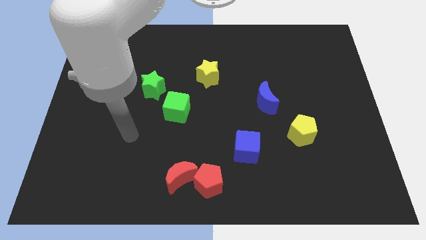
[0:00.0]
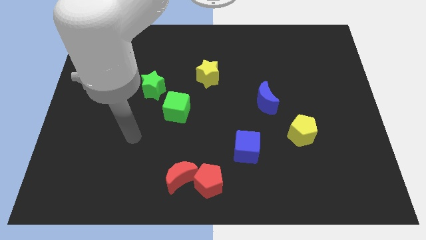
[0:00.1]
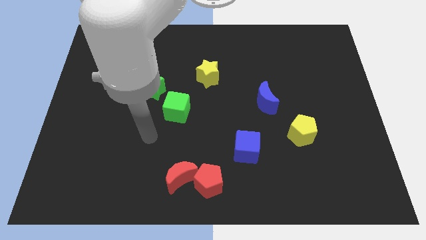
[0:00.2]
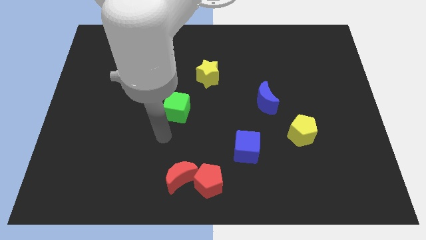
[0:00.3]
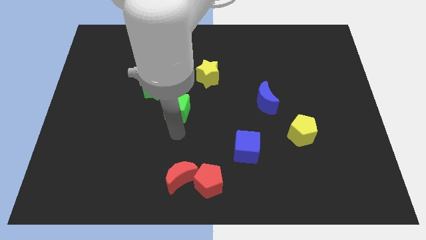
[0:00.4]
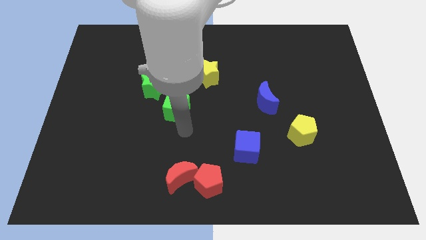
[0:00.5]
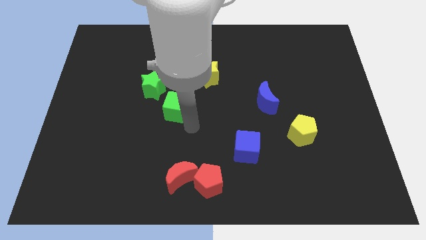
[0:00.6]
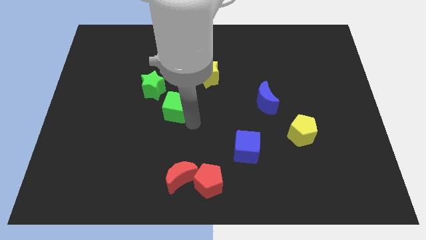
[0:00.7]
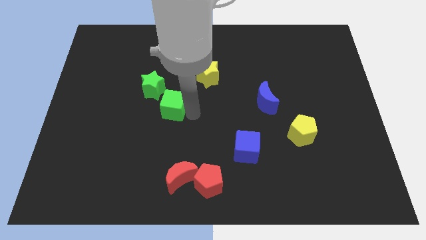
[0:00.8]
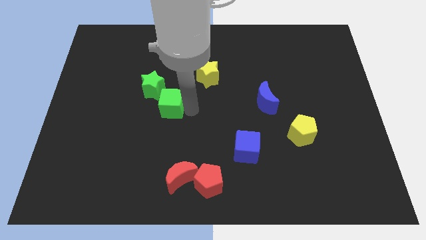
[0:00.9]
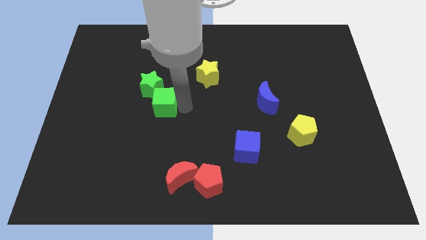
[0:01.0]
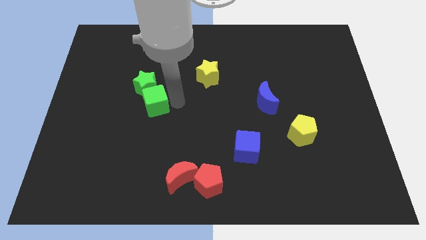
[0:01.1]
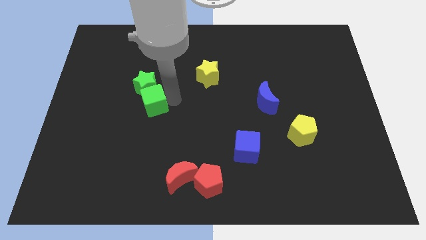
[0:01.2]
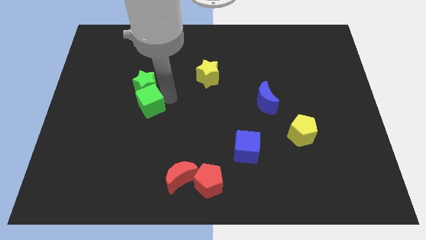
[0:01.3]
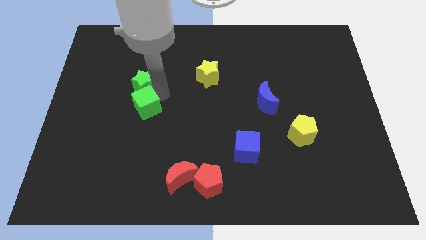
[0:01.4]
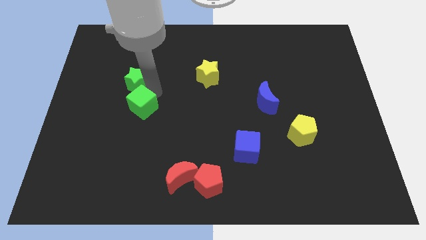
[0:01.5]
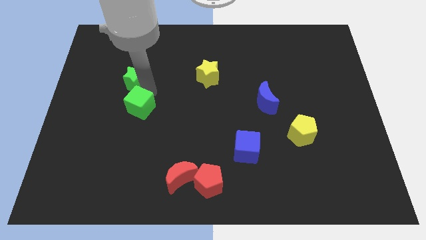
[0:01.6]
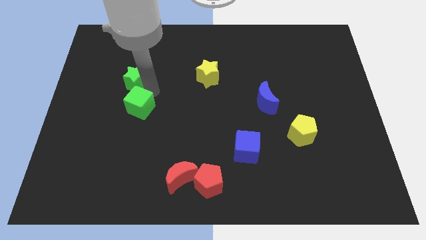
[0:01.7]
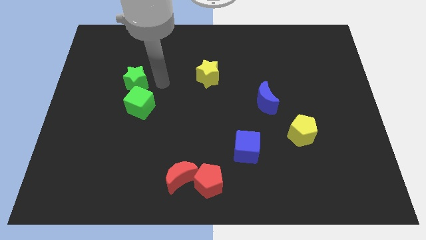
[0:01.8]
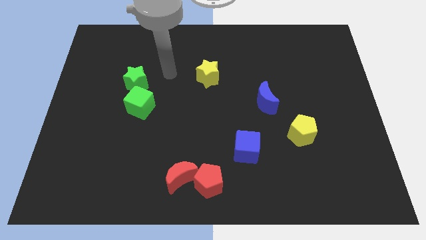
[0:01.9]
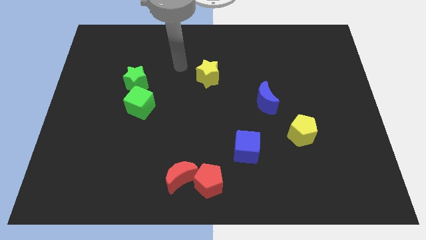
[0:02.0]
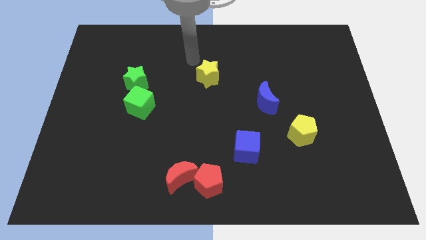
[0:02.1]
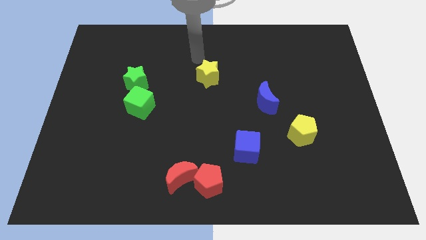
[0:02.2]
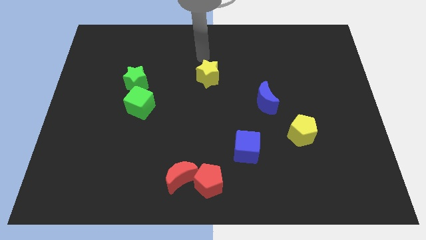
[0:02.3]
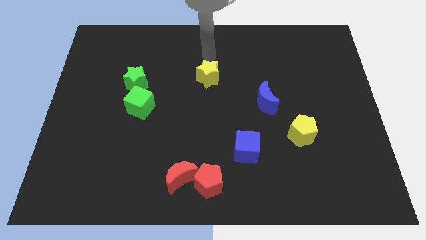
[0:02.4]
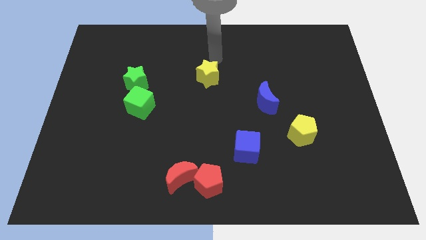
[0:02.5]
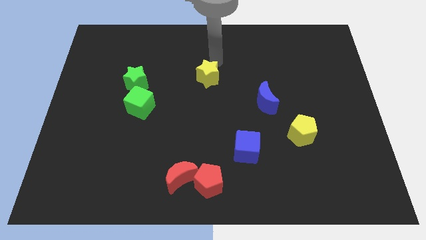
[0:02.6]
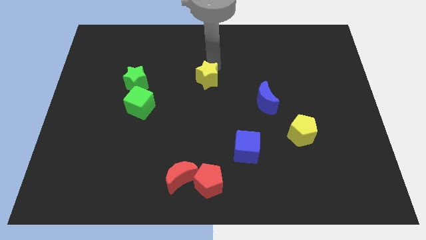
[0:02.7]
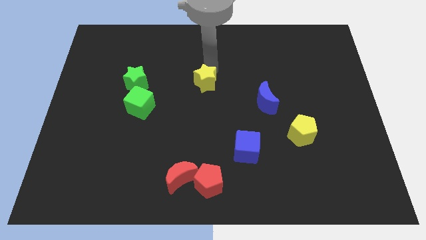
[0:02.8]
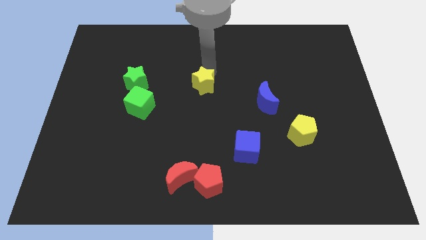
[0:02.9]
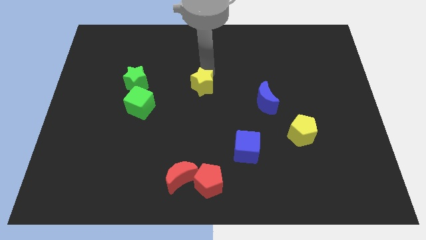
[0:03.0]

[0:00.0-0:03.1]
push the green cube into the green star

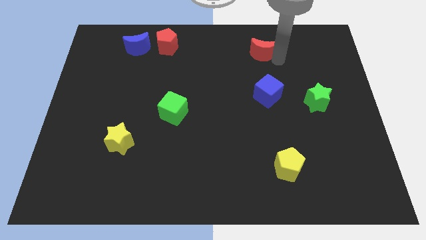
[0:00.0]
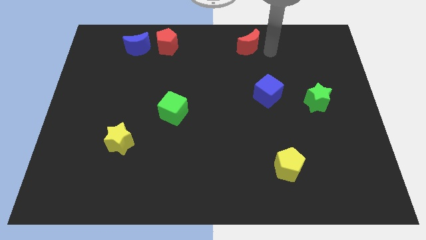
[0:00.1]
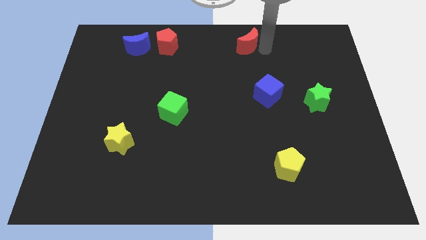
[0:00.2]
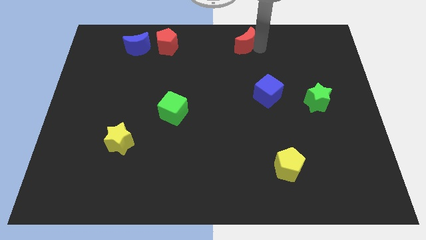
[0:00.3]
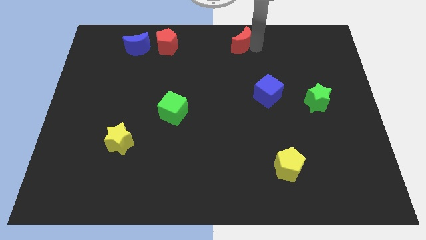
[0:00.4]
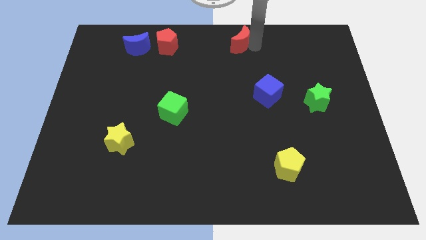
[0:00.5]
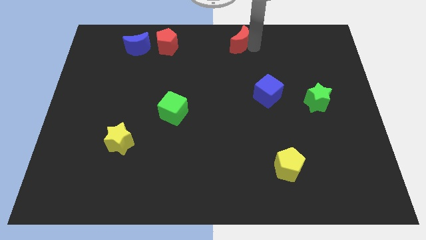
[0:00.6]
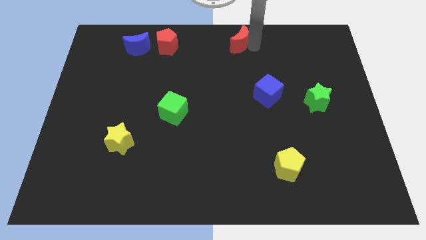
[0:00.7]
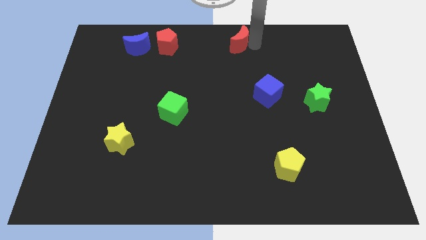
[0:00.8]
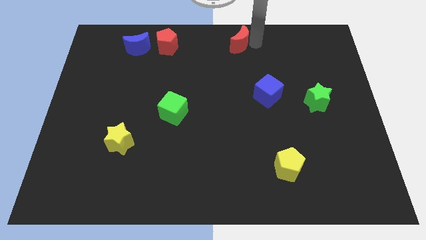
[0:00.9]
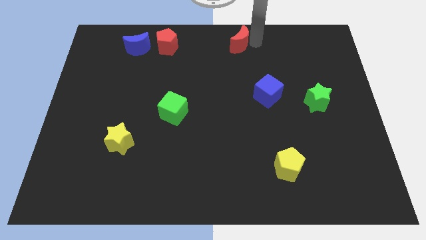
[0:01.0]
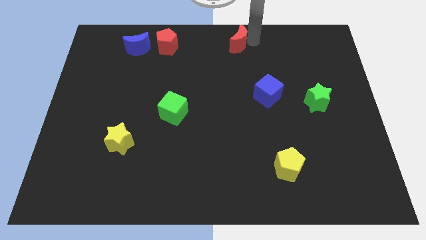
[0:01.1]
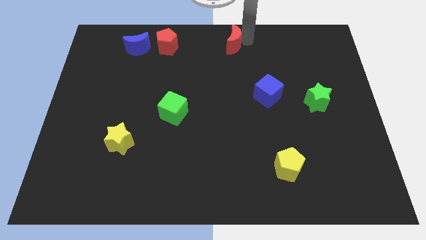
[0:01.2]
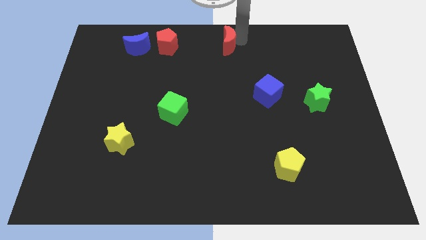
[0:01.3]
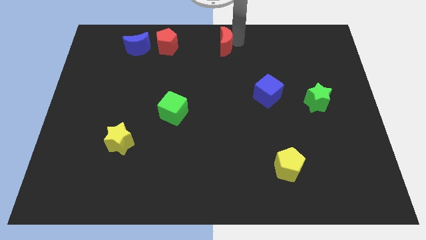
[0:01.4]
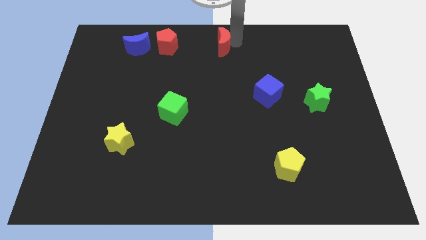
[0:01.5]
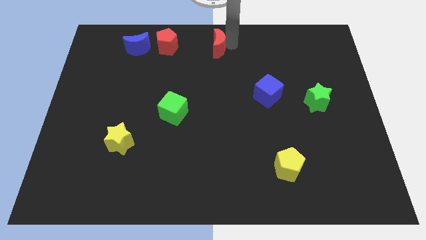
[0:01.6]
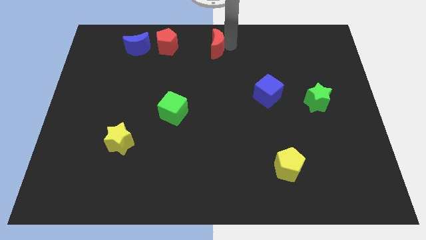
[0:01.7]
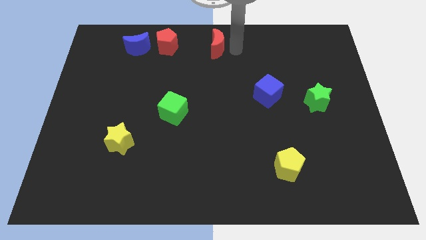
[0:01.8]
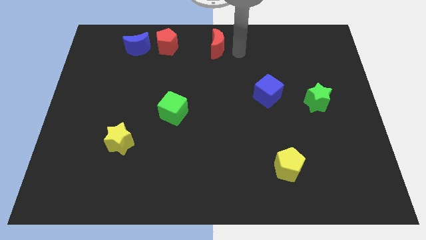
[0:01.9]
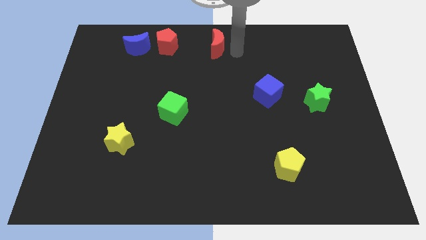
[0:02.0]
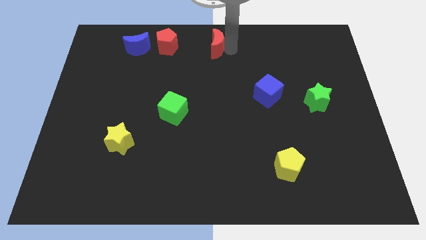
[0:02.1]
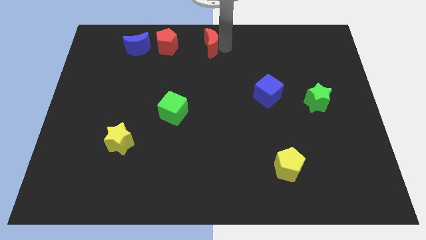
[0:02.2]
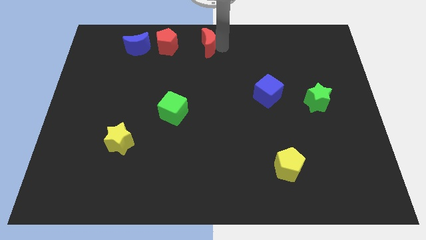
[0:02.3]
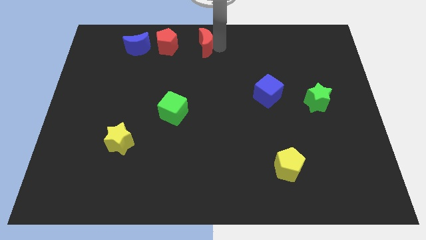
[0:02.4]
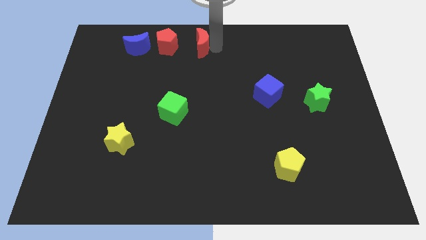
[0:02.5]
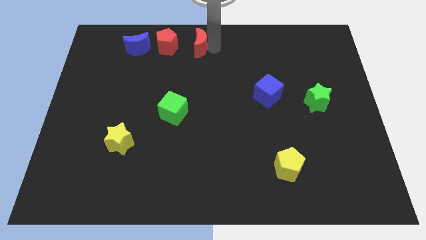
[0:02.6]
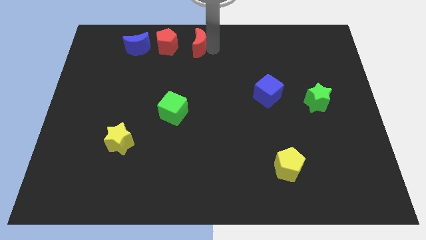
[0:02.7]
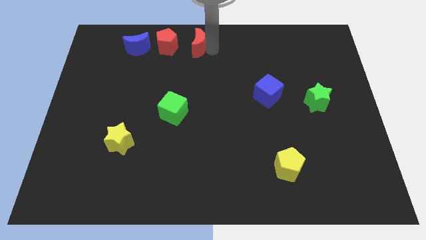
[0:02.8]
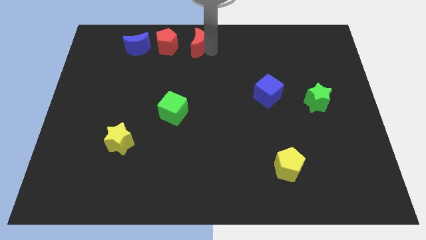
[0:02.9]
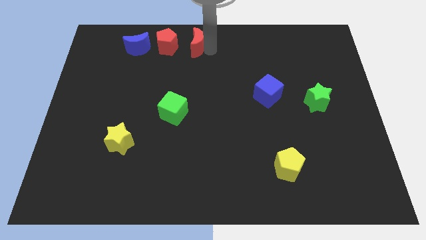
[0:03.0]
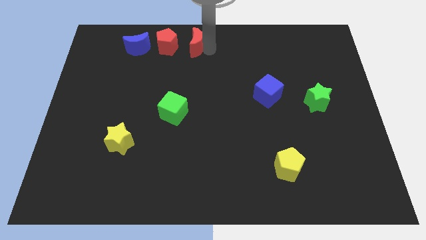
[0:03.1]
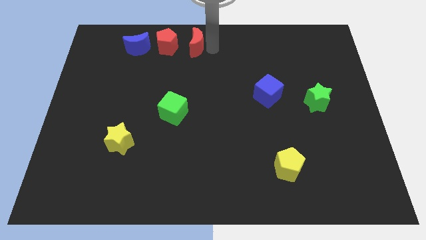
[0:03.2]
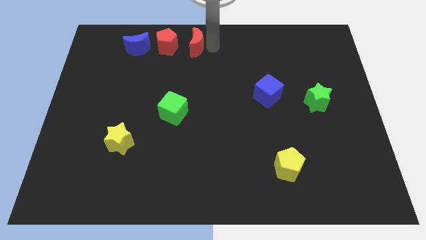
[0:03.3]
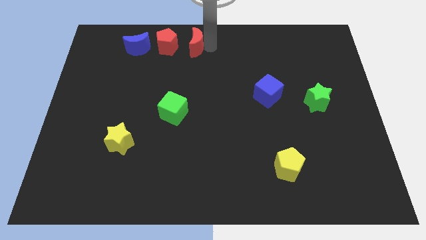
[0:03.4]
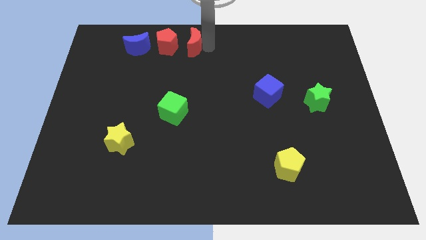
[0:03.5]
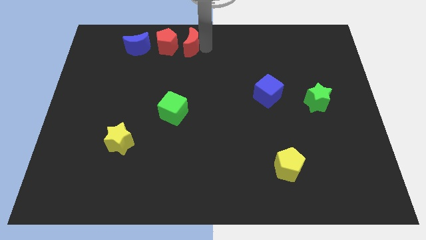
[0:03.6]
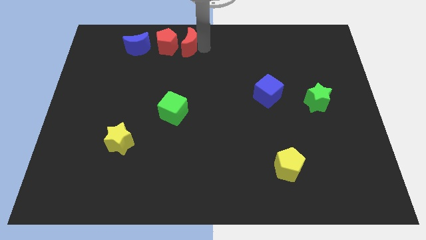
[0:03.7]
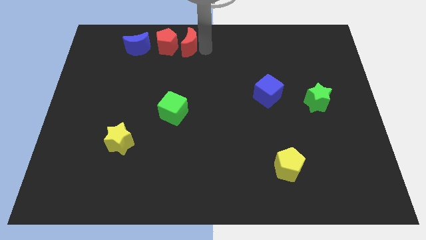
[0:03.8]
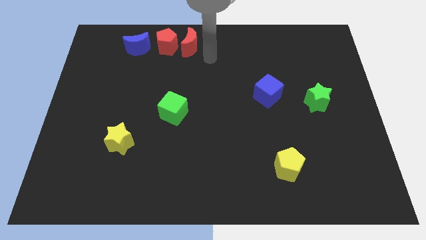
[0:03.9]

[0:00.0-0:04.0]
move the red moon to the top side of the green cube

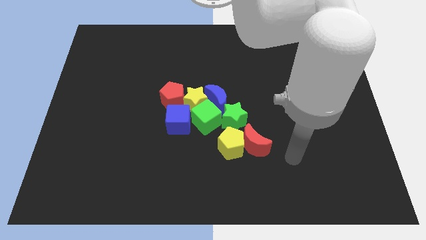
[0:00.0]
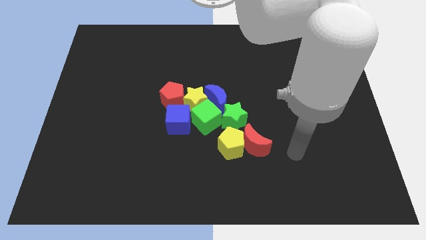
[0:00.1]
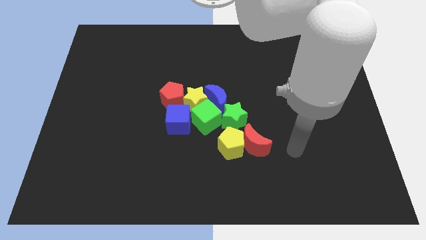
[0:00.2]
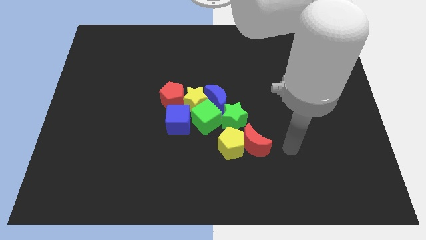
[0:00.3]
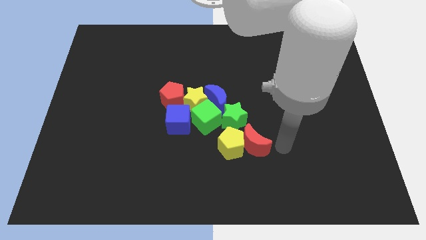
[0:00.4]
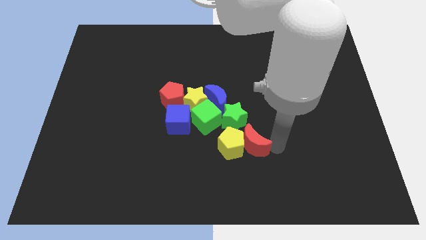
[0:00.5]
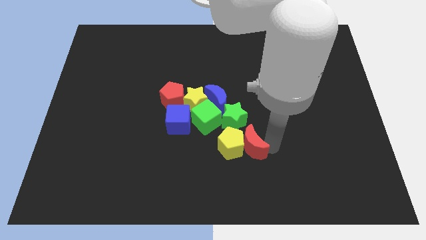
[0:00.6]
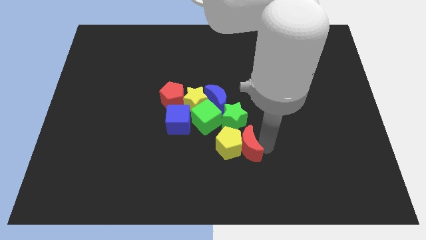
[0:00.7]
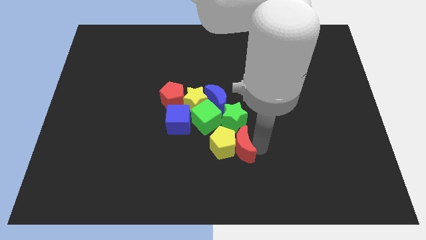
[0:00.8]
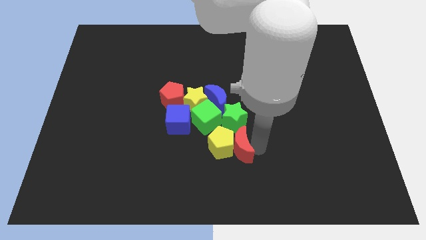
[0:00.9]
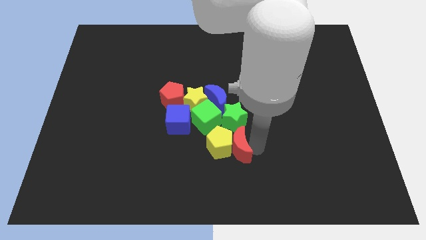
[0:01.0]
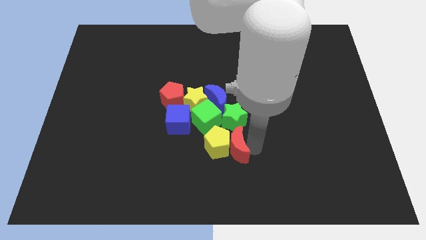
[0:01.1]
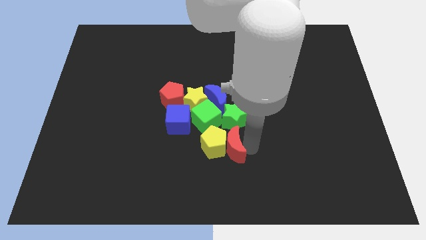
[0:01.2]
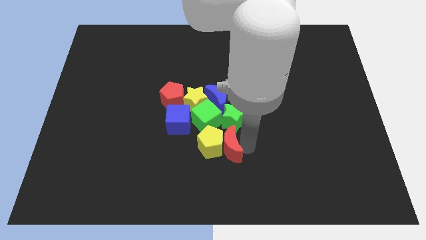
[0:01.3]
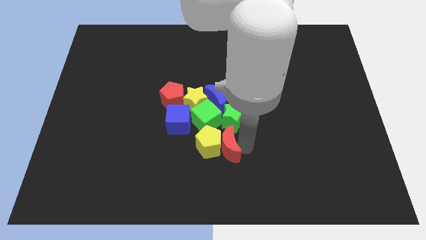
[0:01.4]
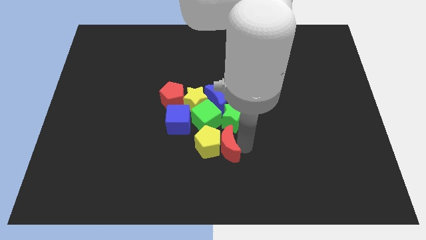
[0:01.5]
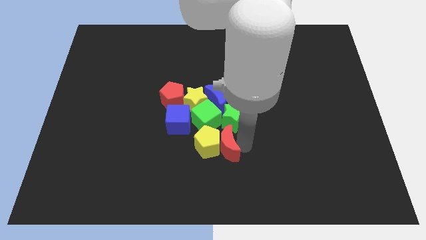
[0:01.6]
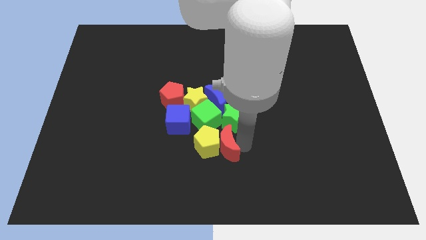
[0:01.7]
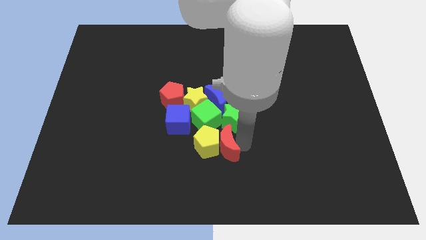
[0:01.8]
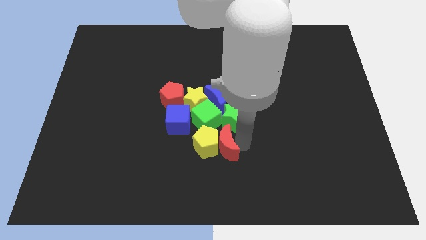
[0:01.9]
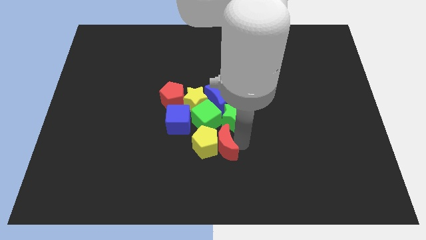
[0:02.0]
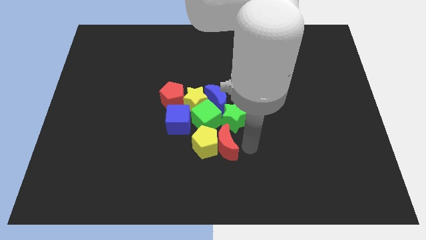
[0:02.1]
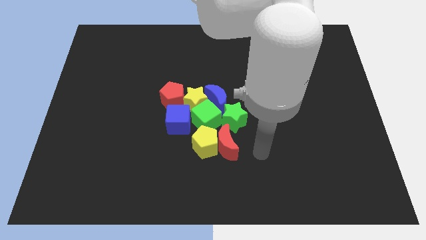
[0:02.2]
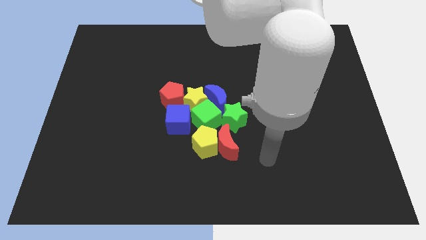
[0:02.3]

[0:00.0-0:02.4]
move the red crescent along with yellow pentagon below the group of blocks
